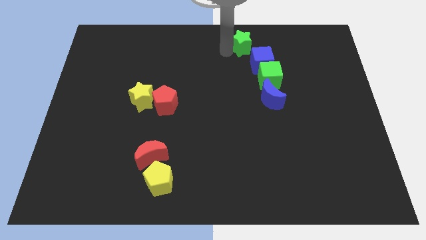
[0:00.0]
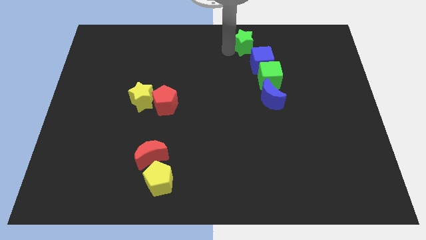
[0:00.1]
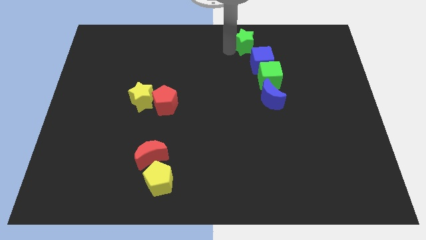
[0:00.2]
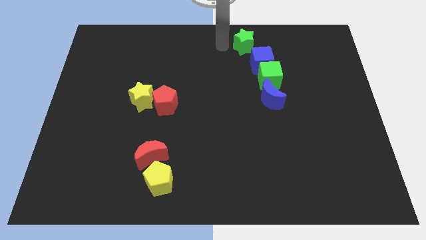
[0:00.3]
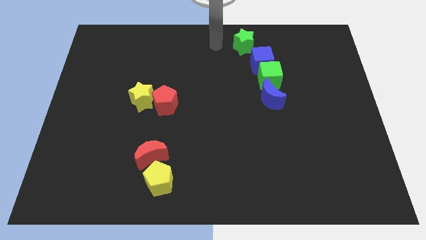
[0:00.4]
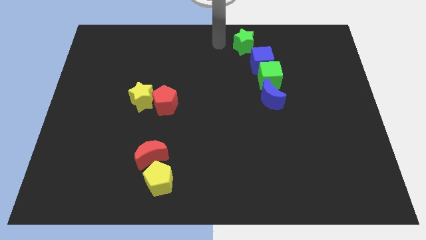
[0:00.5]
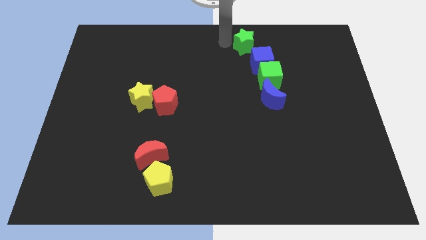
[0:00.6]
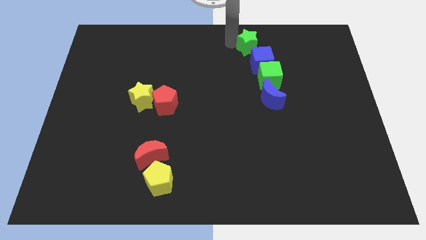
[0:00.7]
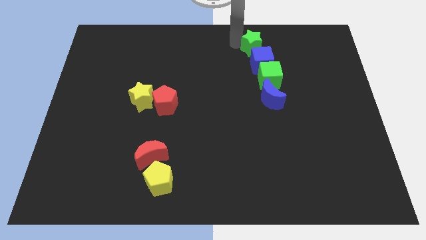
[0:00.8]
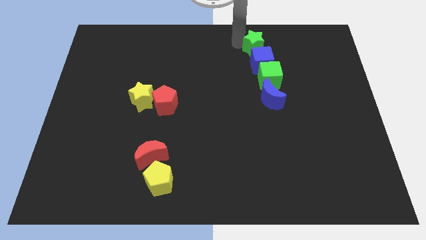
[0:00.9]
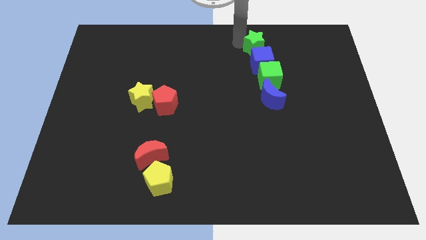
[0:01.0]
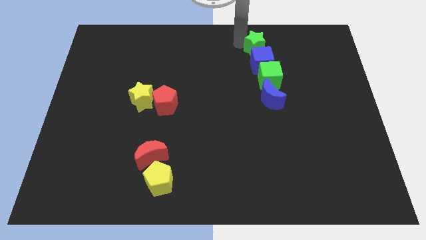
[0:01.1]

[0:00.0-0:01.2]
place the green star above the blue cube

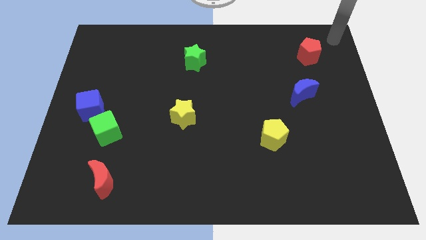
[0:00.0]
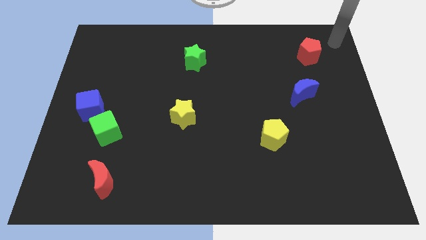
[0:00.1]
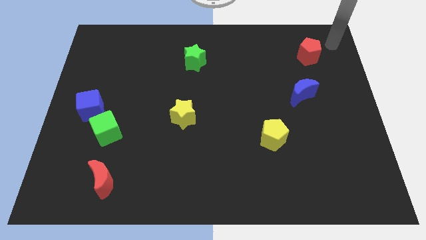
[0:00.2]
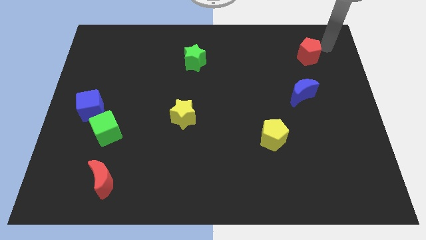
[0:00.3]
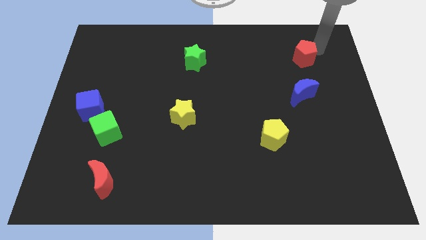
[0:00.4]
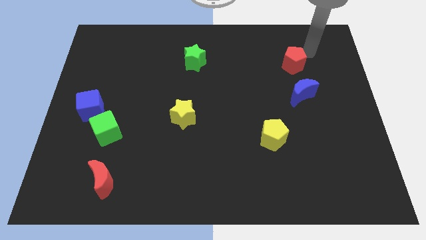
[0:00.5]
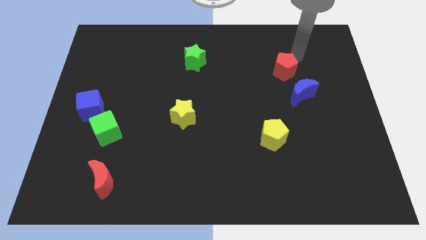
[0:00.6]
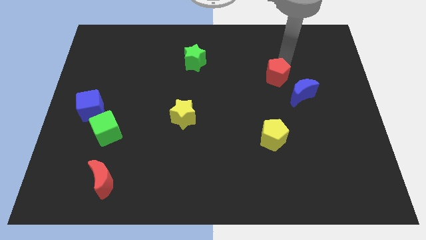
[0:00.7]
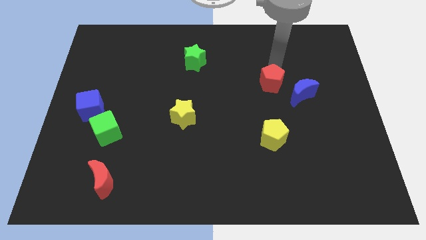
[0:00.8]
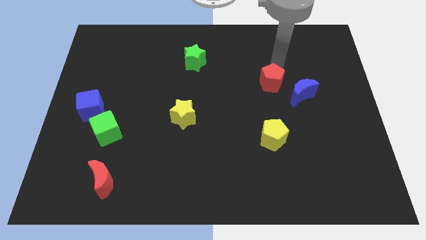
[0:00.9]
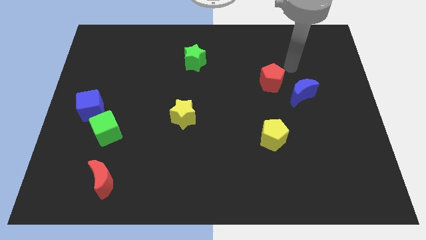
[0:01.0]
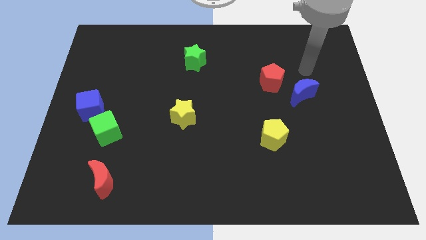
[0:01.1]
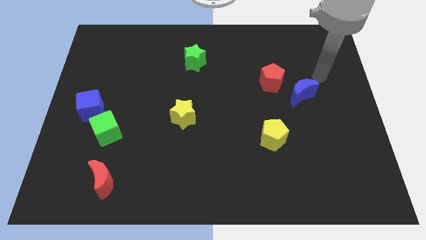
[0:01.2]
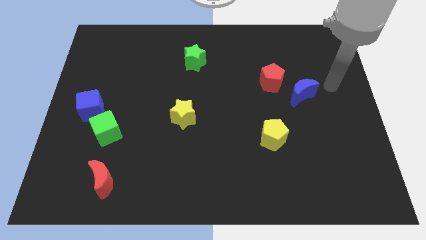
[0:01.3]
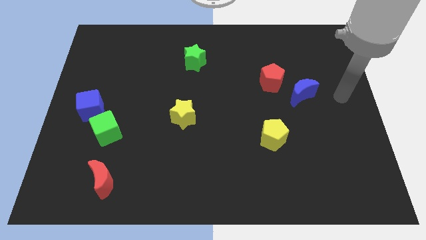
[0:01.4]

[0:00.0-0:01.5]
move the red pentagon to the left of the blue crescent

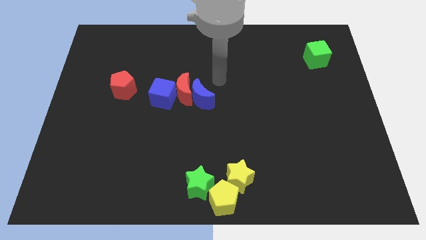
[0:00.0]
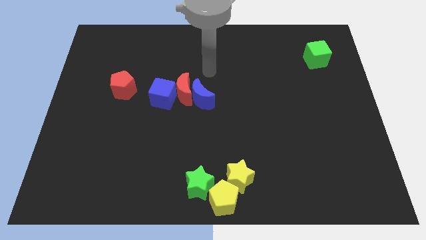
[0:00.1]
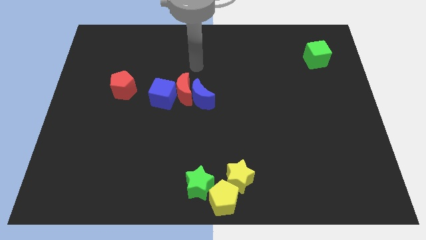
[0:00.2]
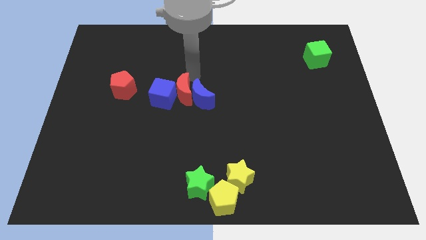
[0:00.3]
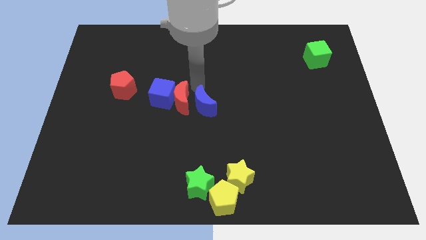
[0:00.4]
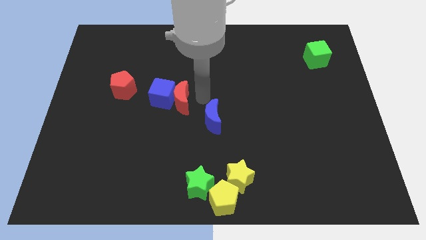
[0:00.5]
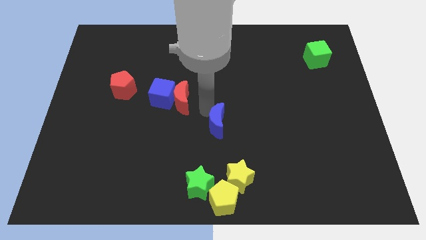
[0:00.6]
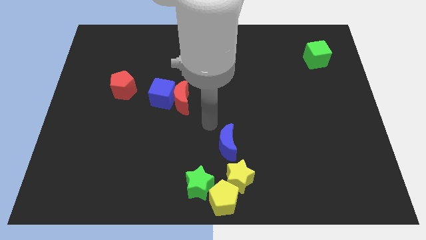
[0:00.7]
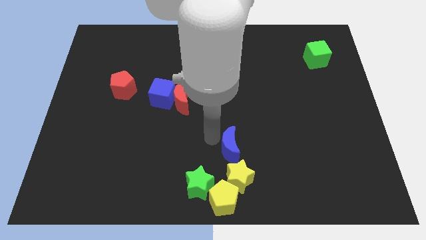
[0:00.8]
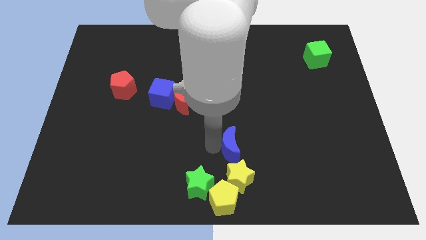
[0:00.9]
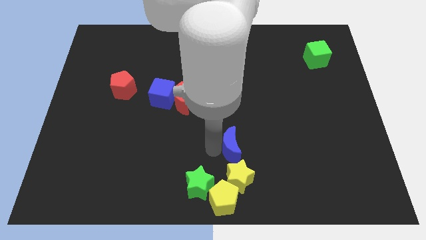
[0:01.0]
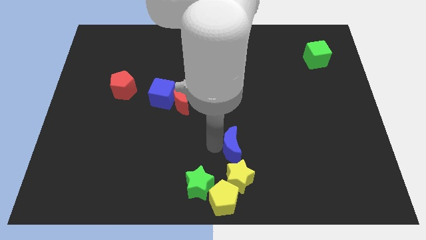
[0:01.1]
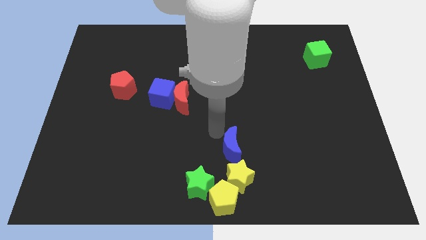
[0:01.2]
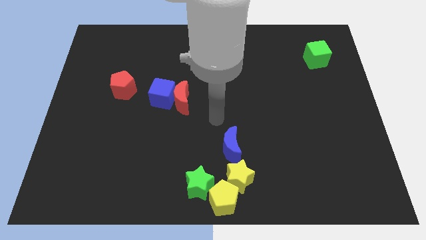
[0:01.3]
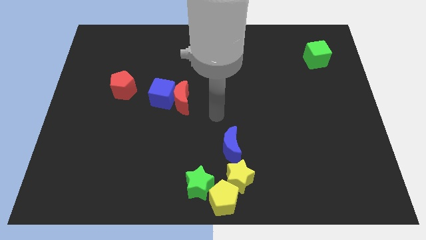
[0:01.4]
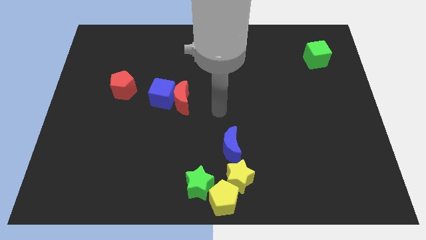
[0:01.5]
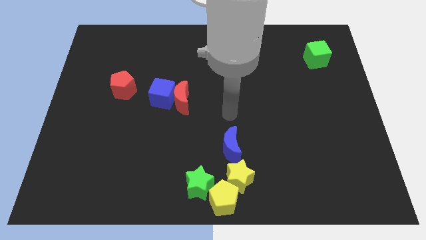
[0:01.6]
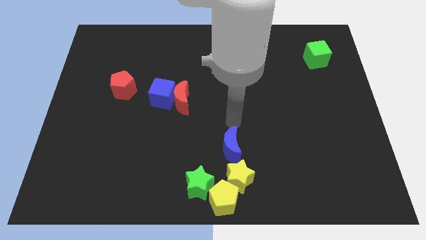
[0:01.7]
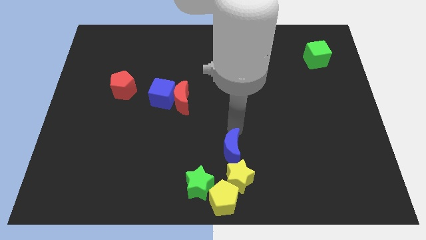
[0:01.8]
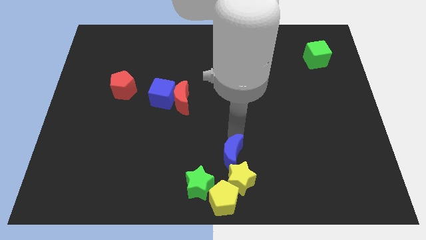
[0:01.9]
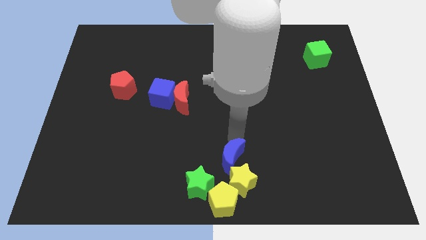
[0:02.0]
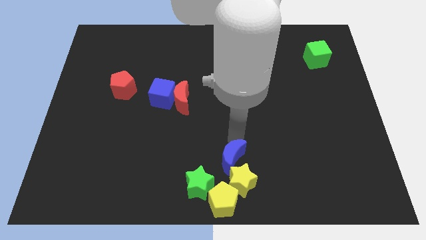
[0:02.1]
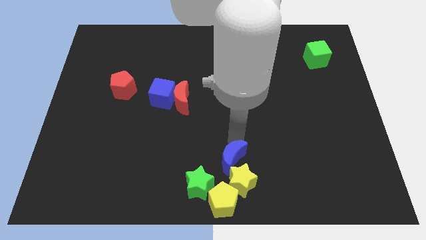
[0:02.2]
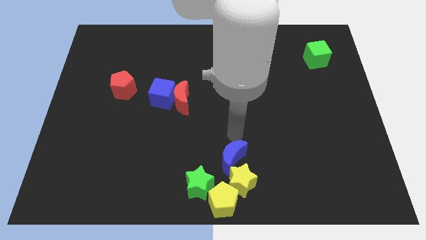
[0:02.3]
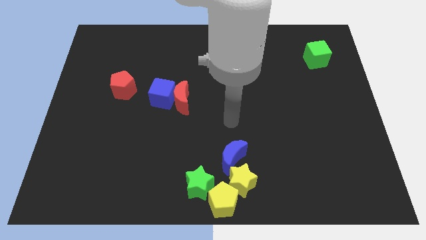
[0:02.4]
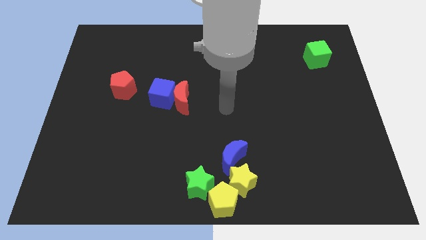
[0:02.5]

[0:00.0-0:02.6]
push the blue crescent into the yellow star

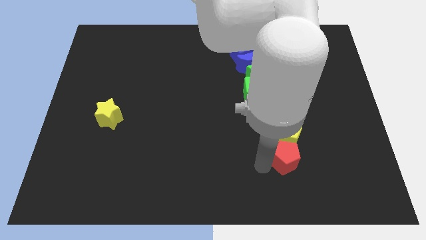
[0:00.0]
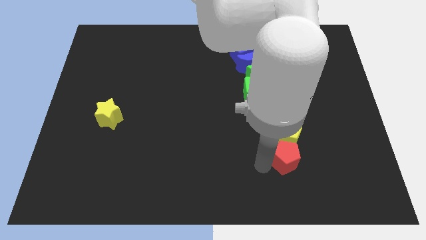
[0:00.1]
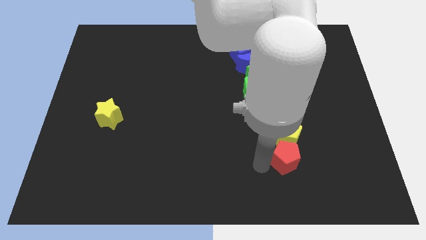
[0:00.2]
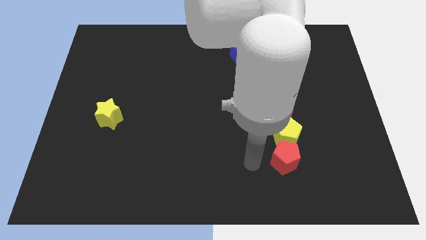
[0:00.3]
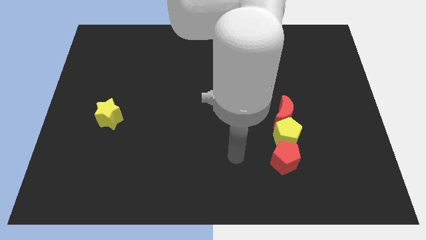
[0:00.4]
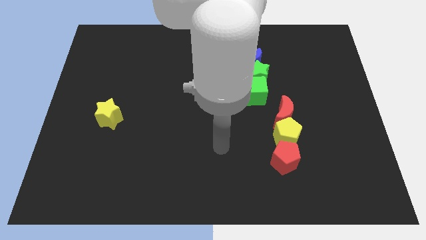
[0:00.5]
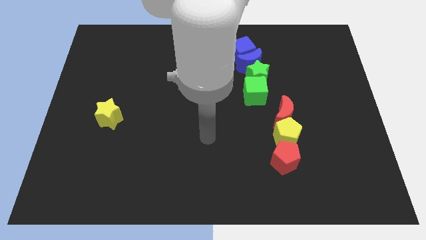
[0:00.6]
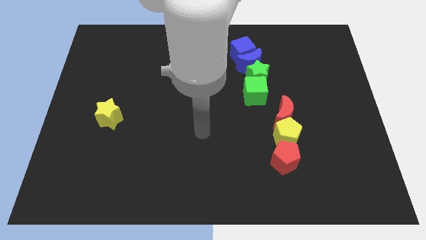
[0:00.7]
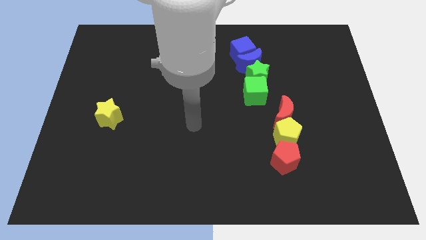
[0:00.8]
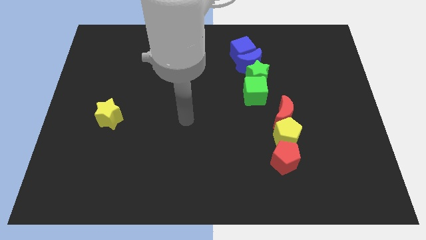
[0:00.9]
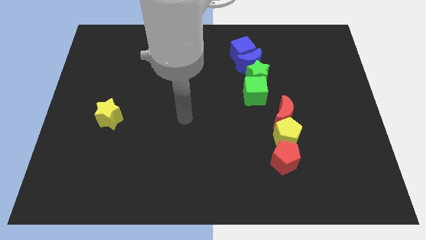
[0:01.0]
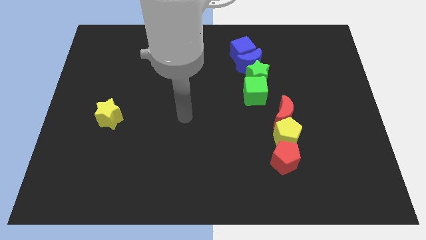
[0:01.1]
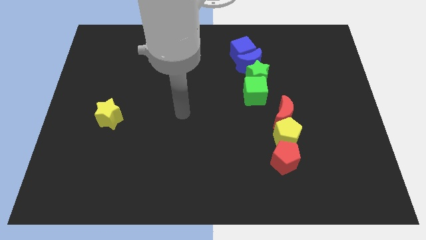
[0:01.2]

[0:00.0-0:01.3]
move the arm away from the red pentagon

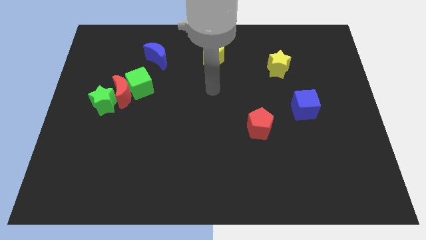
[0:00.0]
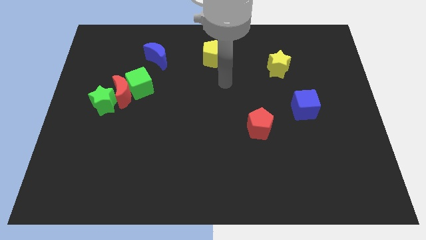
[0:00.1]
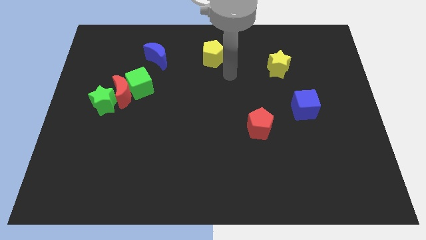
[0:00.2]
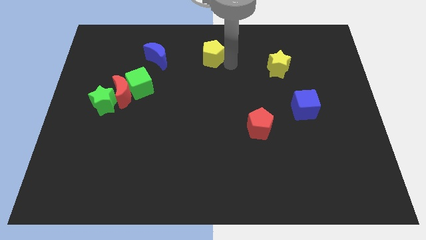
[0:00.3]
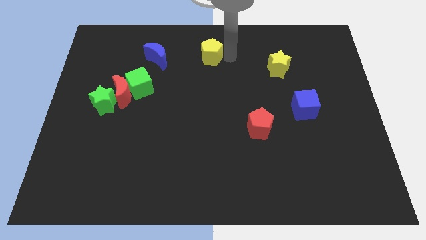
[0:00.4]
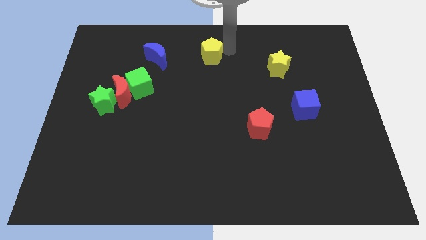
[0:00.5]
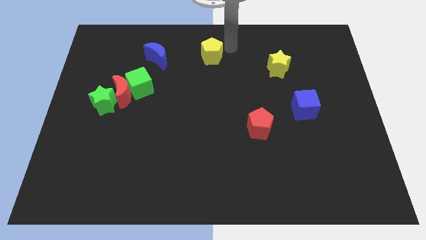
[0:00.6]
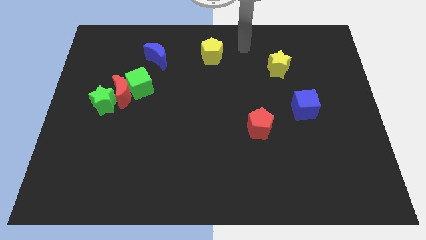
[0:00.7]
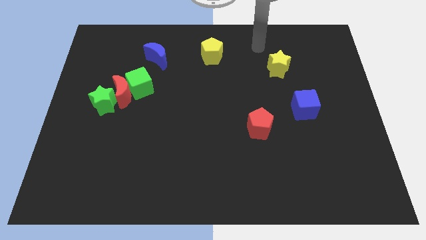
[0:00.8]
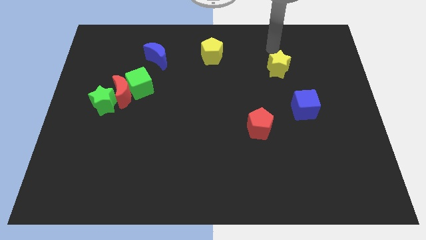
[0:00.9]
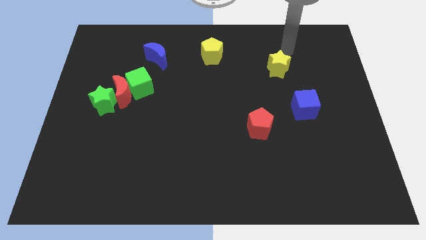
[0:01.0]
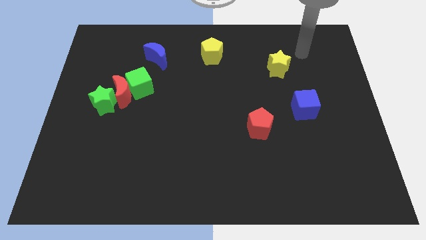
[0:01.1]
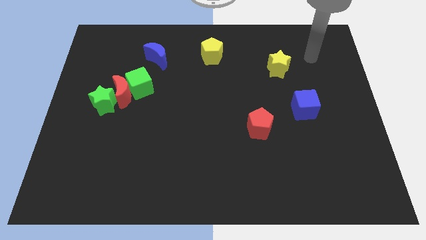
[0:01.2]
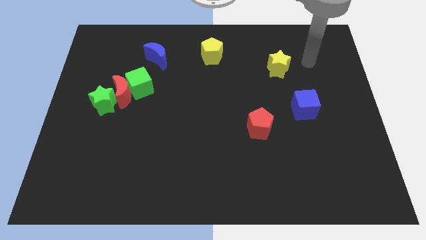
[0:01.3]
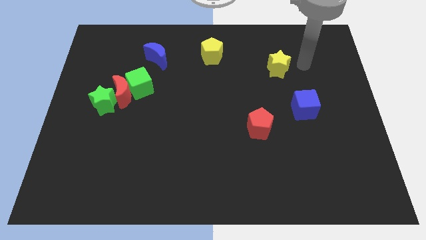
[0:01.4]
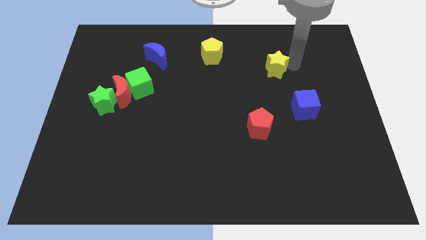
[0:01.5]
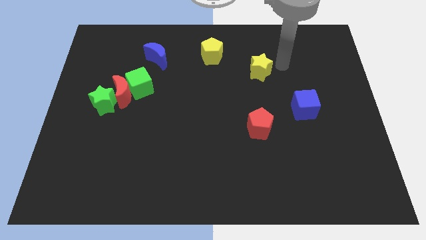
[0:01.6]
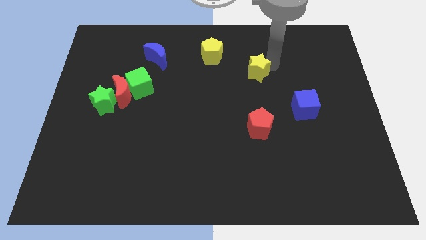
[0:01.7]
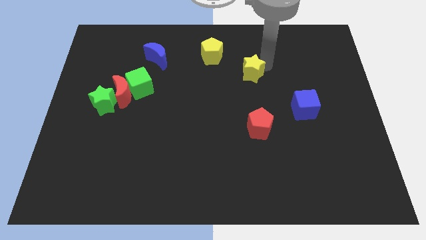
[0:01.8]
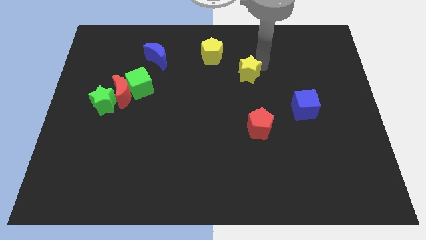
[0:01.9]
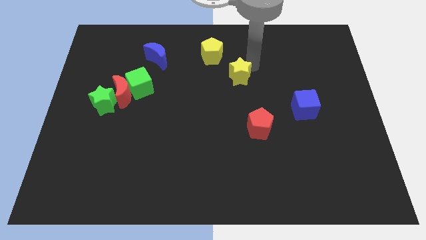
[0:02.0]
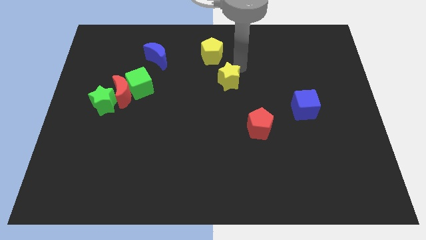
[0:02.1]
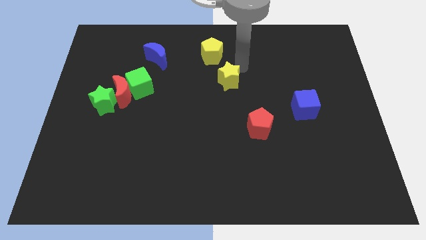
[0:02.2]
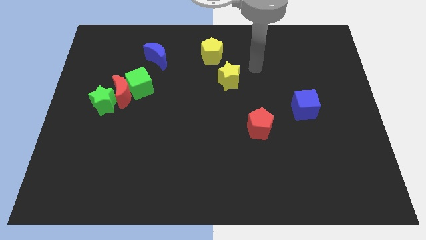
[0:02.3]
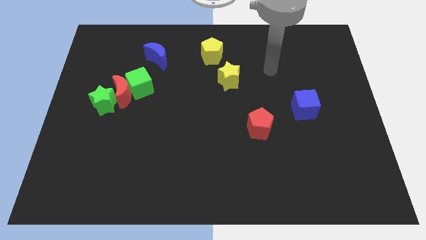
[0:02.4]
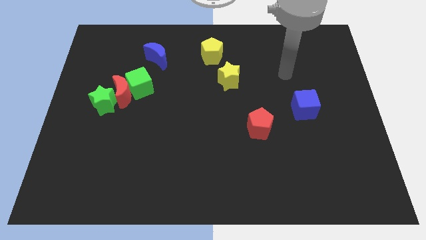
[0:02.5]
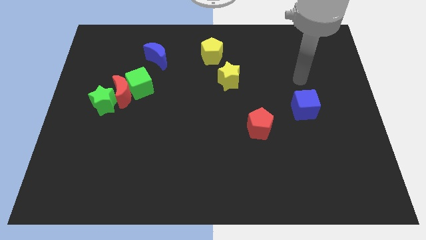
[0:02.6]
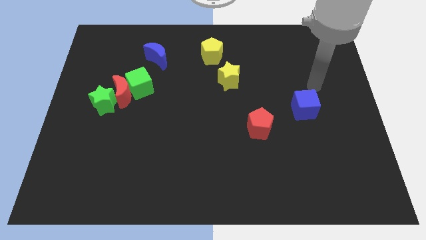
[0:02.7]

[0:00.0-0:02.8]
push the yellow star right bottom to the yellow pentagon
